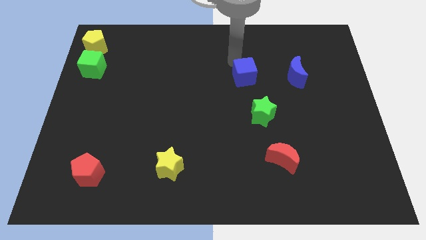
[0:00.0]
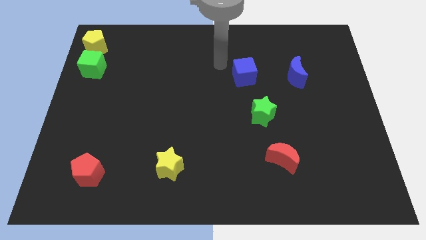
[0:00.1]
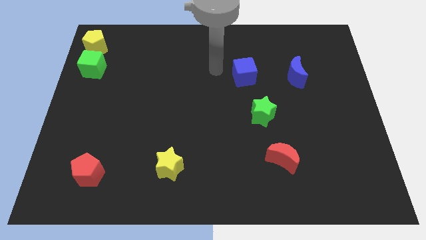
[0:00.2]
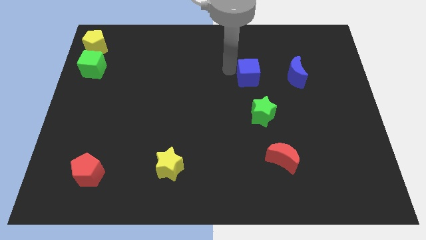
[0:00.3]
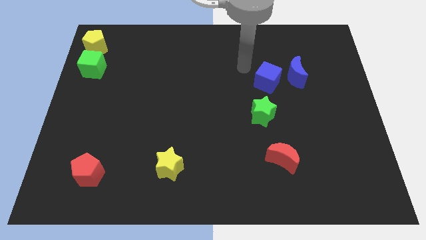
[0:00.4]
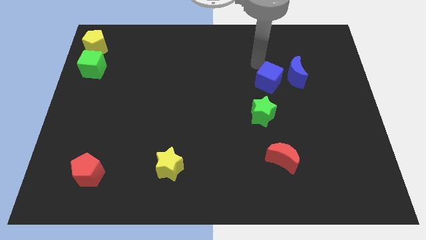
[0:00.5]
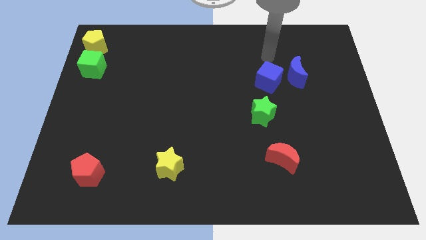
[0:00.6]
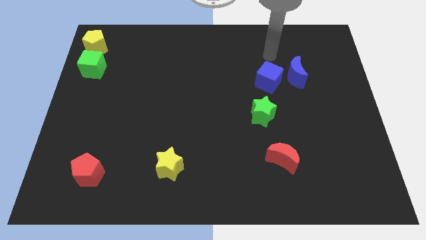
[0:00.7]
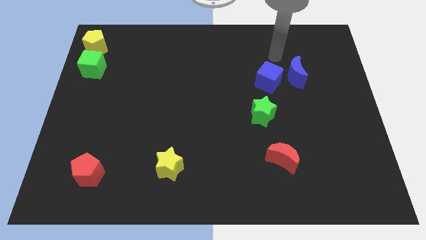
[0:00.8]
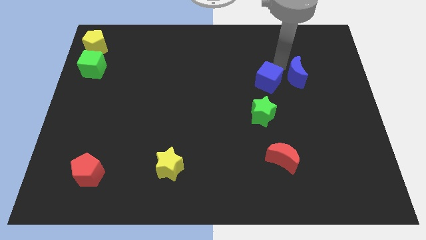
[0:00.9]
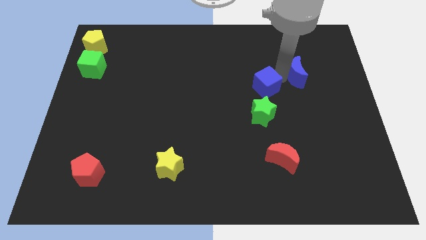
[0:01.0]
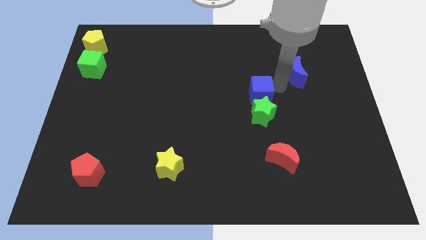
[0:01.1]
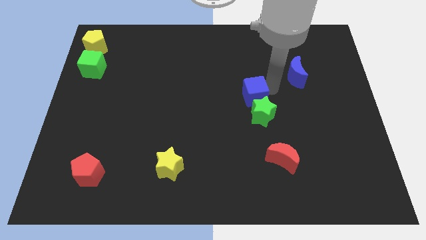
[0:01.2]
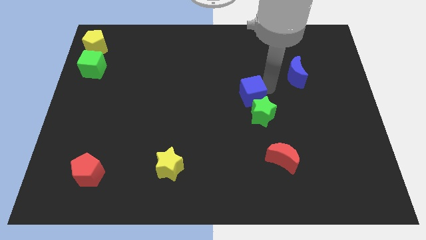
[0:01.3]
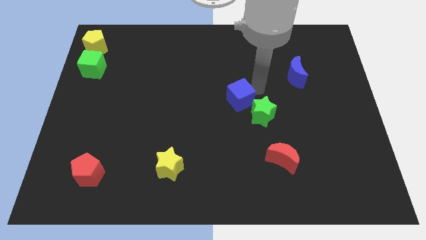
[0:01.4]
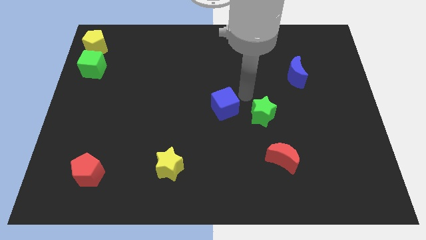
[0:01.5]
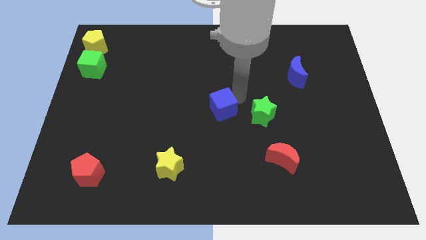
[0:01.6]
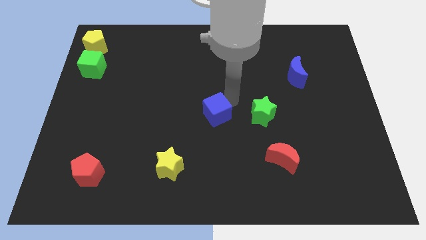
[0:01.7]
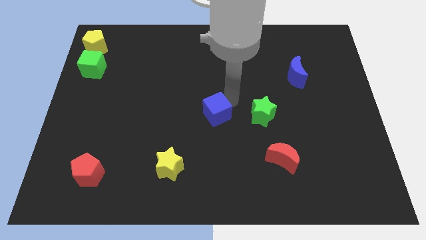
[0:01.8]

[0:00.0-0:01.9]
put the blue cube parallel left to the green star

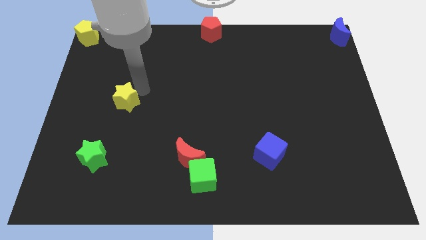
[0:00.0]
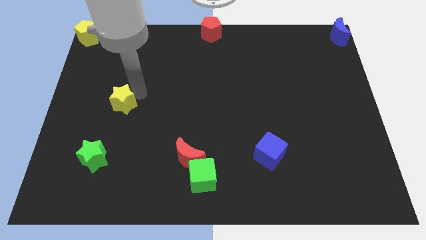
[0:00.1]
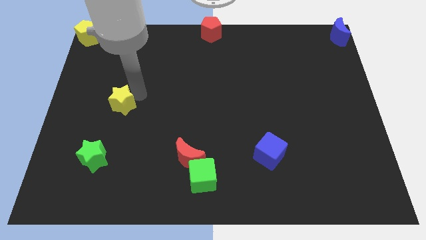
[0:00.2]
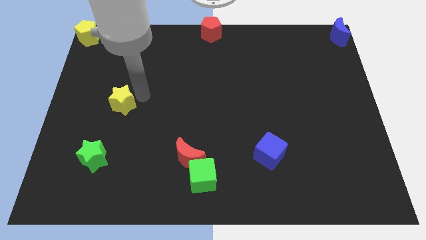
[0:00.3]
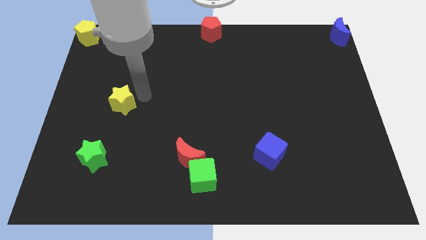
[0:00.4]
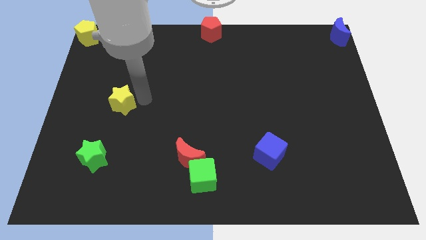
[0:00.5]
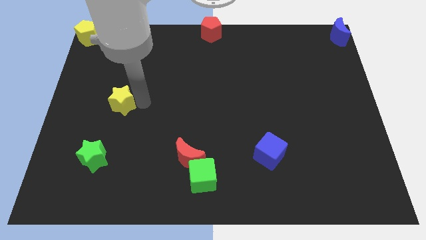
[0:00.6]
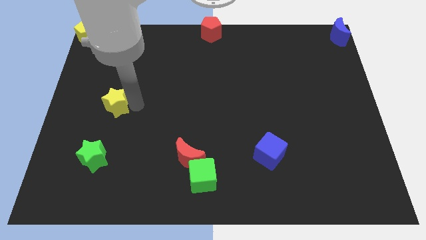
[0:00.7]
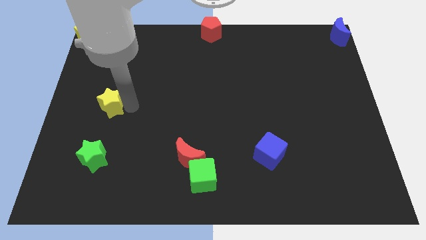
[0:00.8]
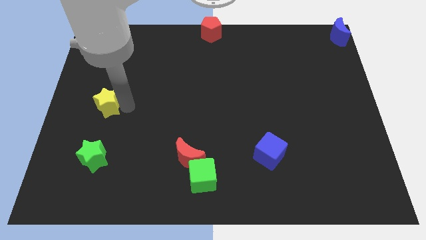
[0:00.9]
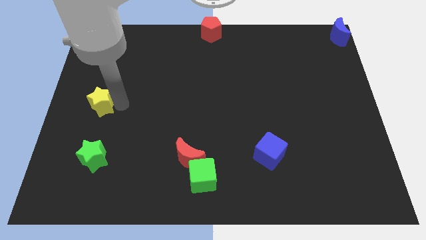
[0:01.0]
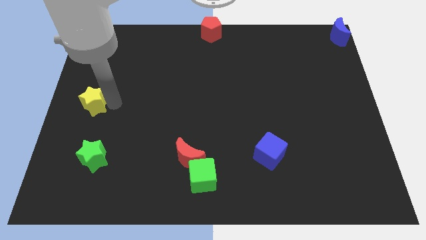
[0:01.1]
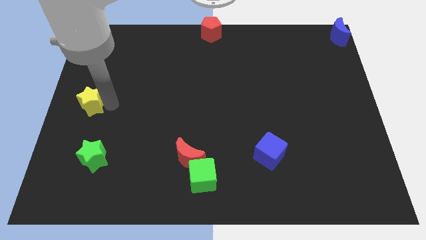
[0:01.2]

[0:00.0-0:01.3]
push the yellow star to the top of the green star

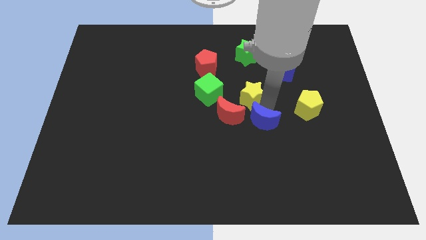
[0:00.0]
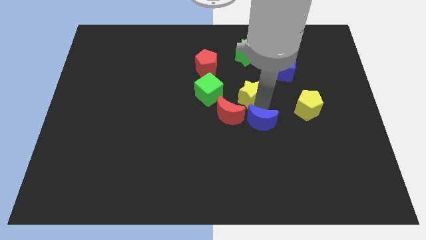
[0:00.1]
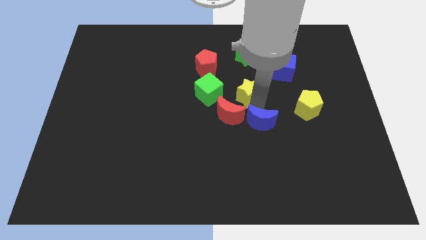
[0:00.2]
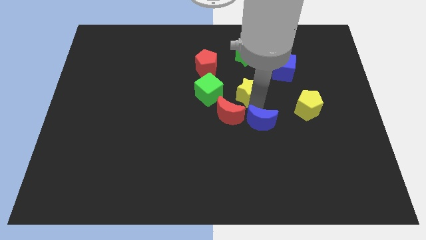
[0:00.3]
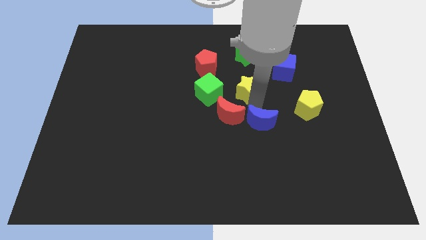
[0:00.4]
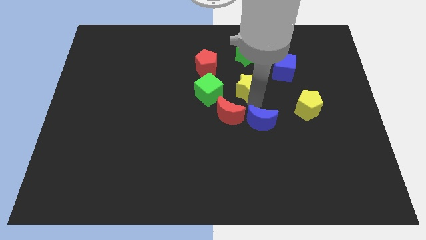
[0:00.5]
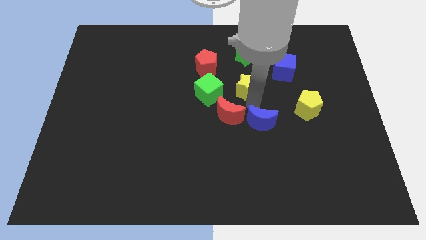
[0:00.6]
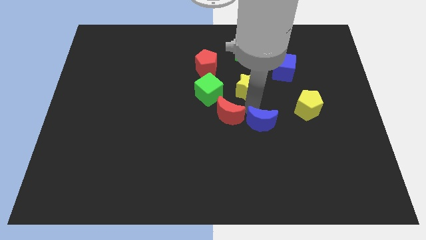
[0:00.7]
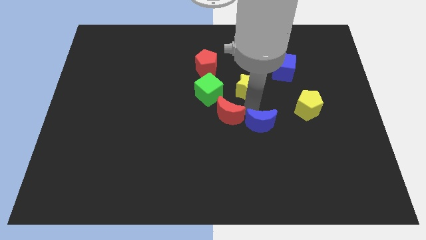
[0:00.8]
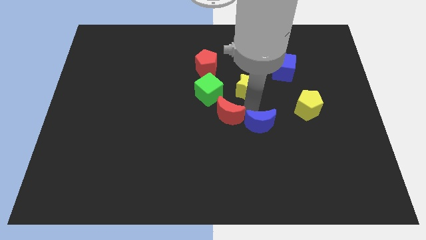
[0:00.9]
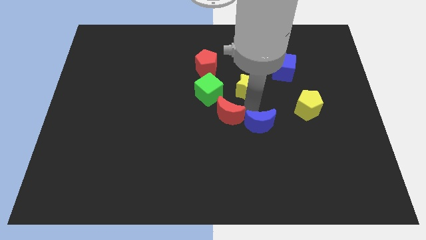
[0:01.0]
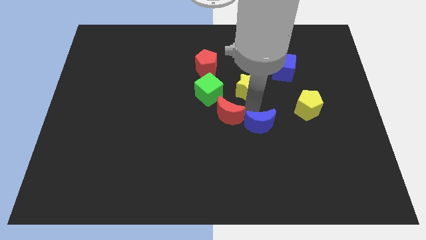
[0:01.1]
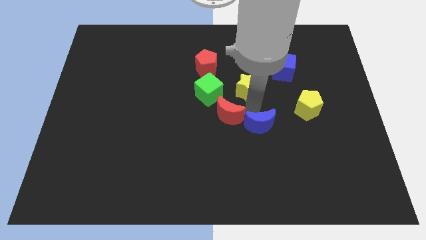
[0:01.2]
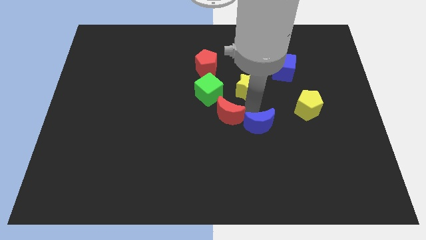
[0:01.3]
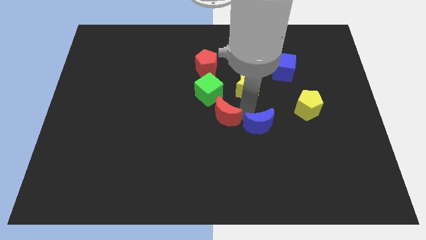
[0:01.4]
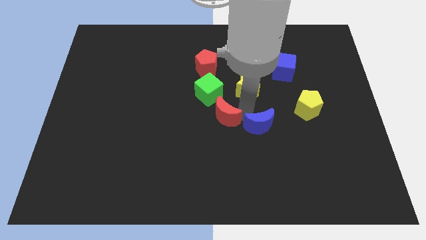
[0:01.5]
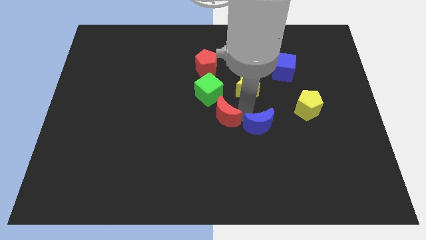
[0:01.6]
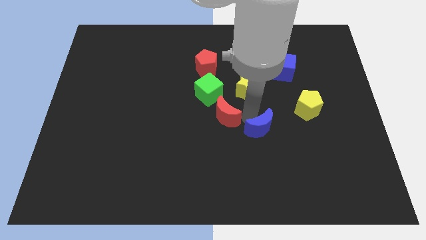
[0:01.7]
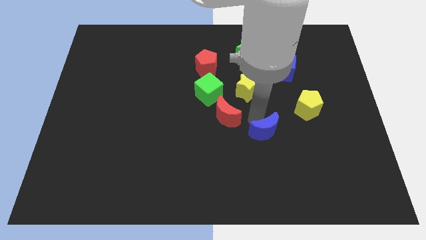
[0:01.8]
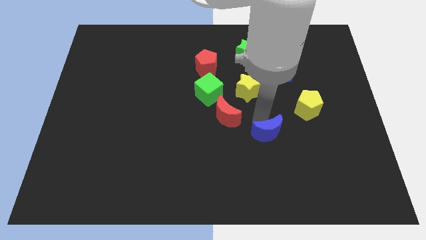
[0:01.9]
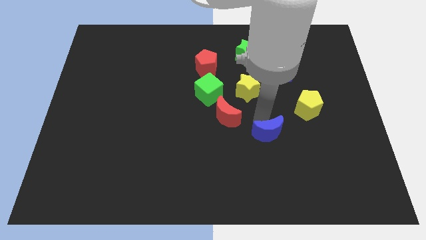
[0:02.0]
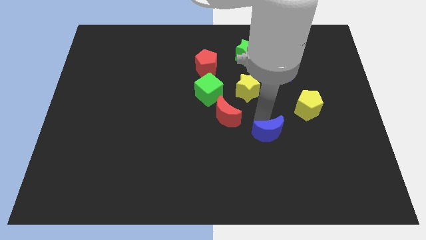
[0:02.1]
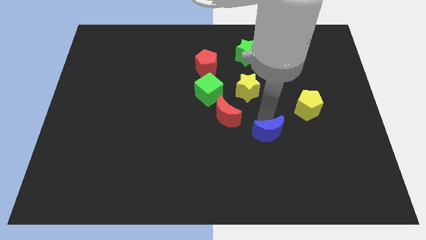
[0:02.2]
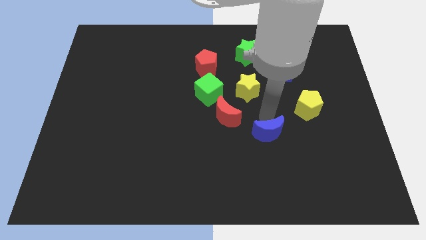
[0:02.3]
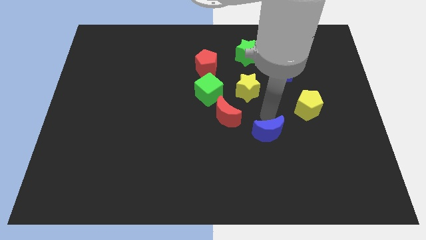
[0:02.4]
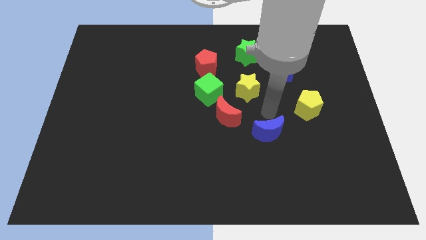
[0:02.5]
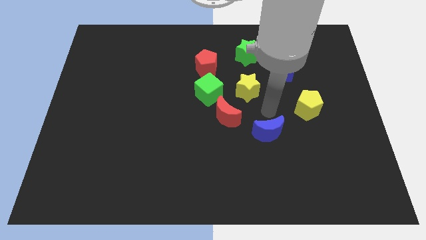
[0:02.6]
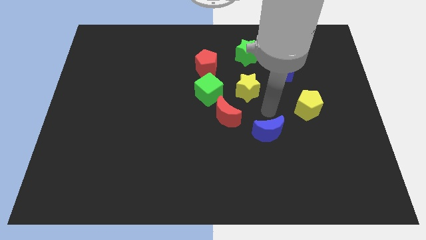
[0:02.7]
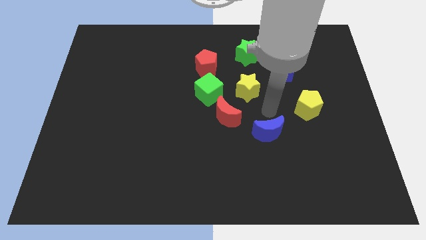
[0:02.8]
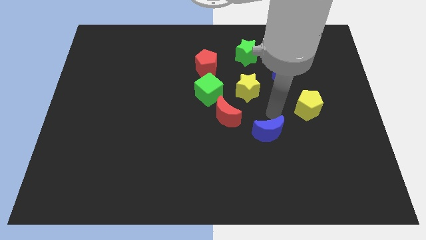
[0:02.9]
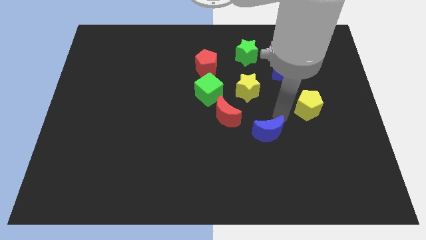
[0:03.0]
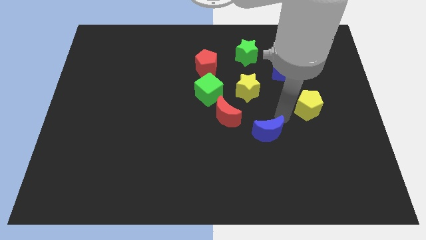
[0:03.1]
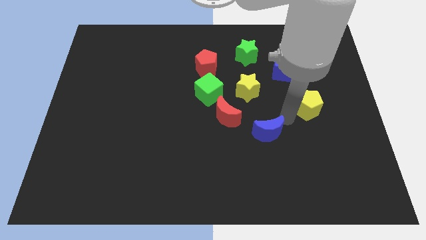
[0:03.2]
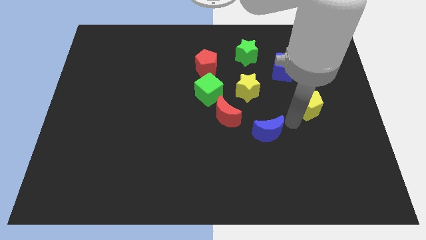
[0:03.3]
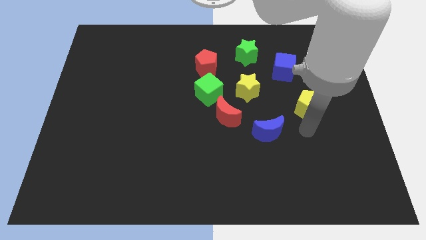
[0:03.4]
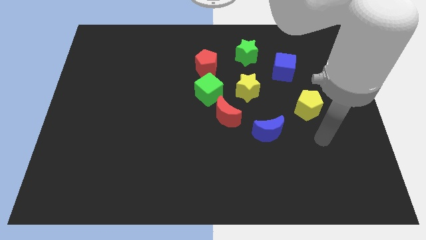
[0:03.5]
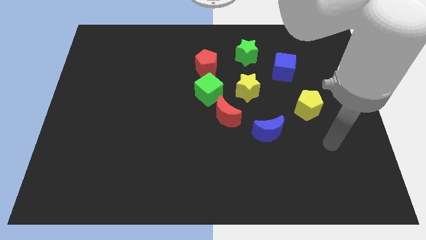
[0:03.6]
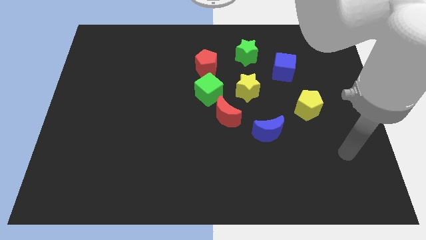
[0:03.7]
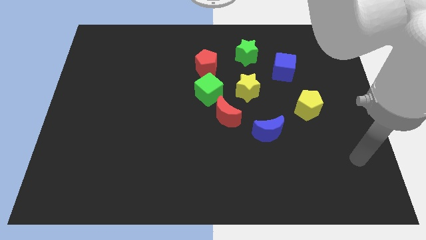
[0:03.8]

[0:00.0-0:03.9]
push the yellow star away from the blue moon

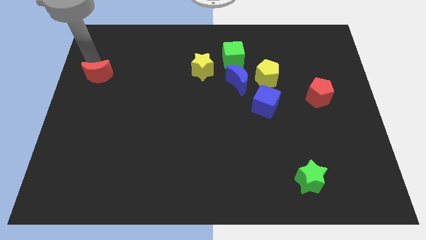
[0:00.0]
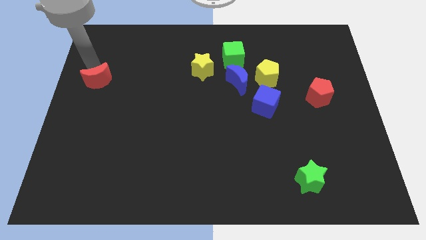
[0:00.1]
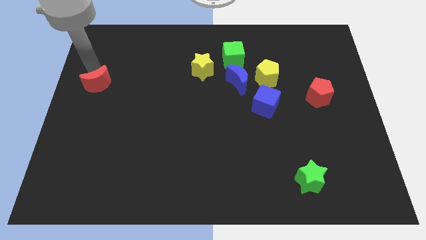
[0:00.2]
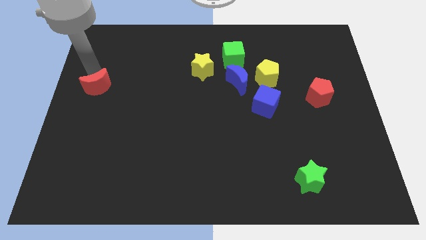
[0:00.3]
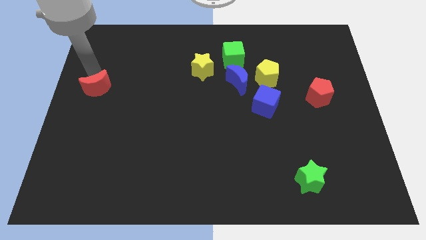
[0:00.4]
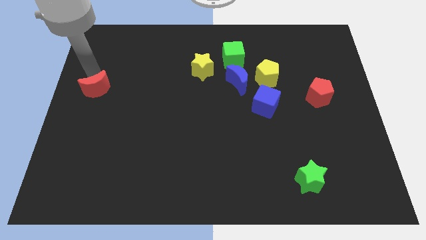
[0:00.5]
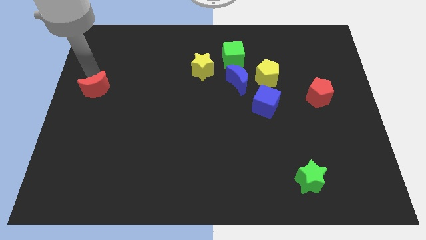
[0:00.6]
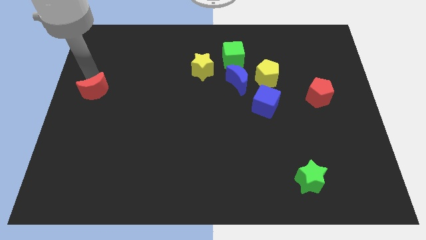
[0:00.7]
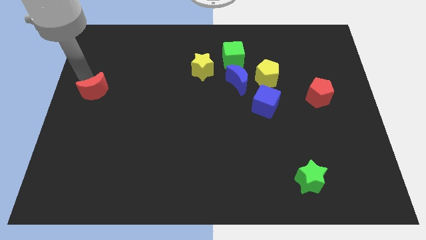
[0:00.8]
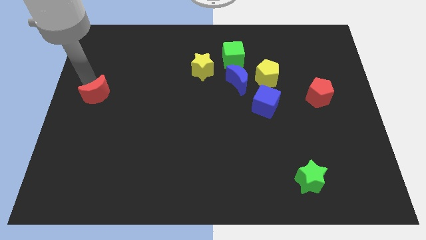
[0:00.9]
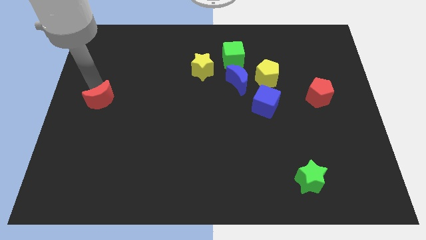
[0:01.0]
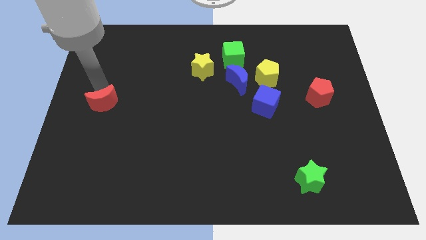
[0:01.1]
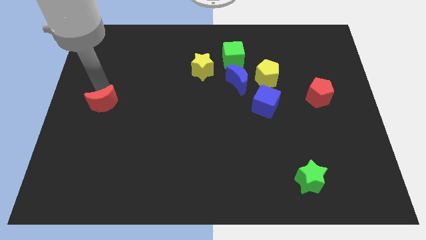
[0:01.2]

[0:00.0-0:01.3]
slide the red crescent slightly downwards

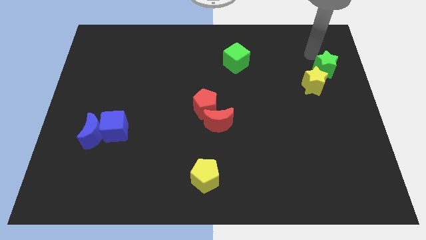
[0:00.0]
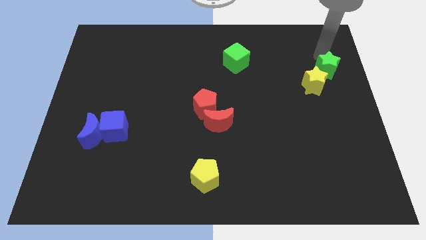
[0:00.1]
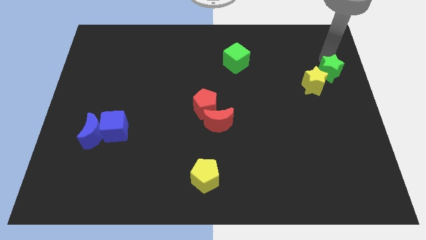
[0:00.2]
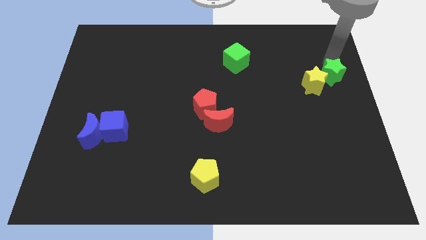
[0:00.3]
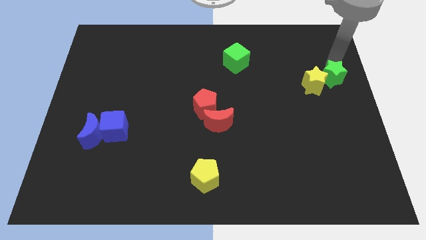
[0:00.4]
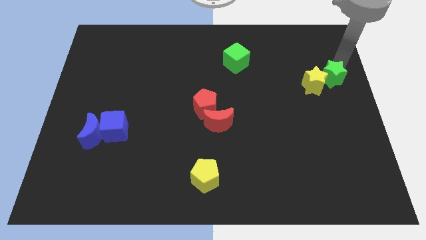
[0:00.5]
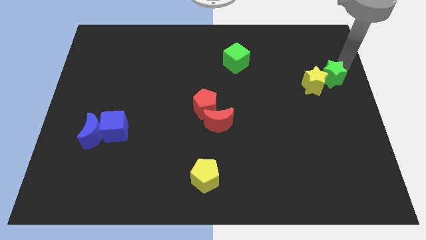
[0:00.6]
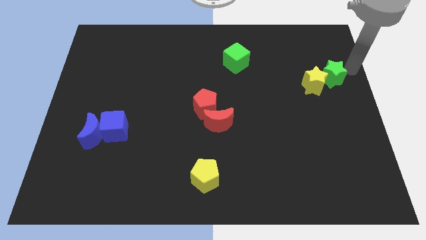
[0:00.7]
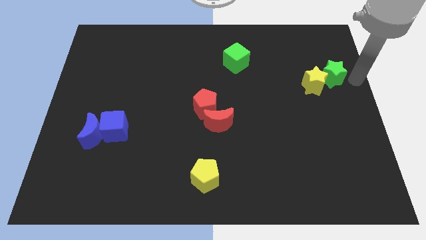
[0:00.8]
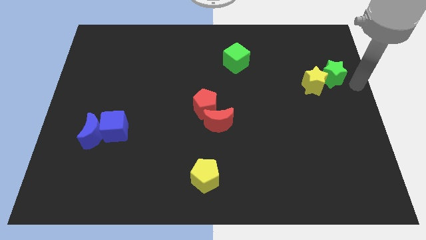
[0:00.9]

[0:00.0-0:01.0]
move the green star close to the yellow star
